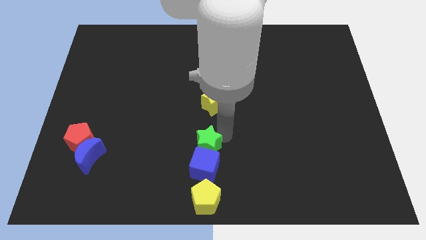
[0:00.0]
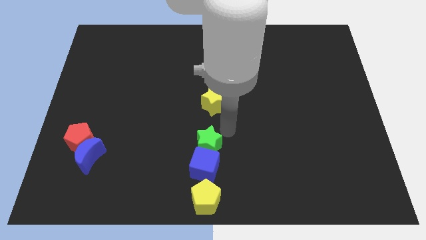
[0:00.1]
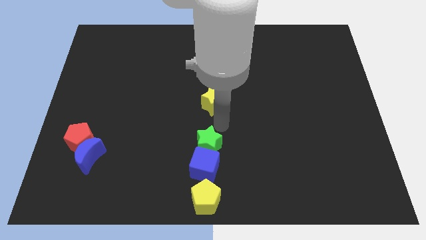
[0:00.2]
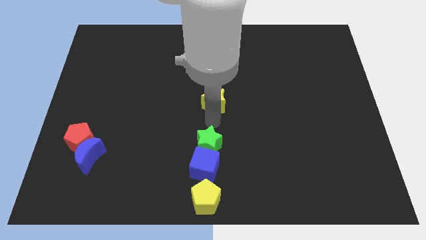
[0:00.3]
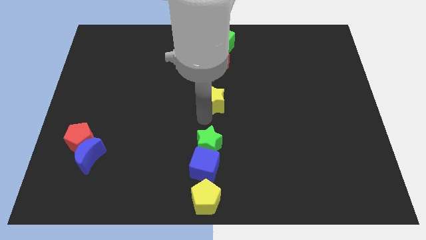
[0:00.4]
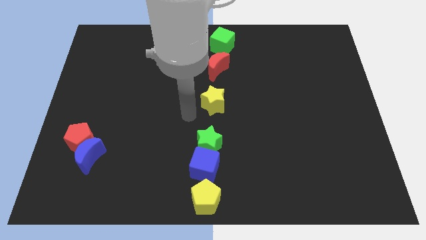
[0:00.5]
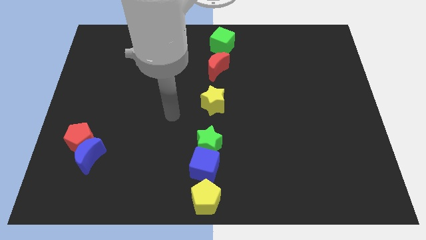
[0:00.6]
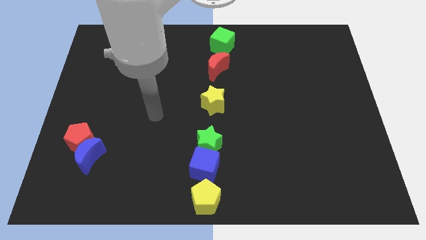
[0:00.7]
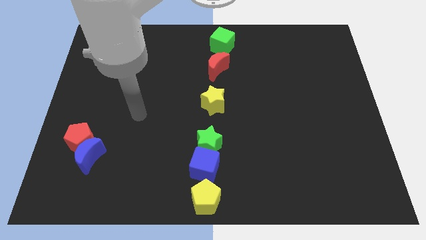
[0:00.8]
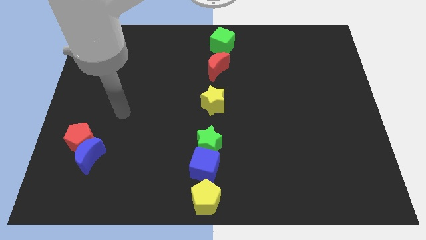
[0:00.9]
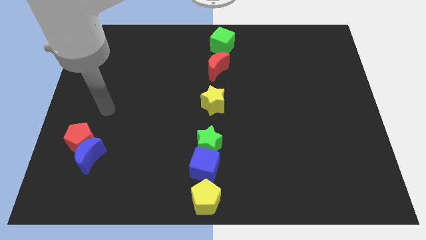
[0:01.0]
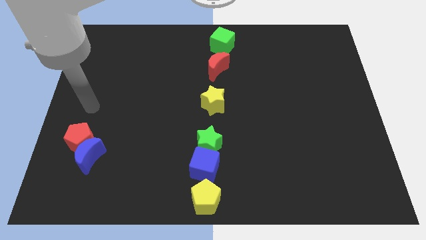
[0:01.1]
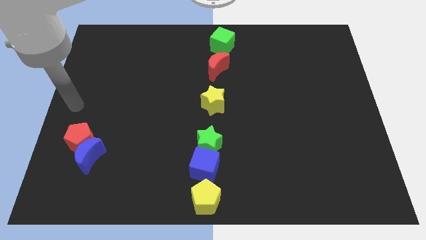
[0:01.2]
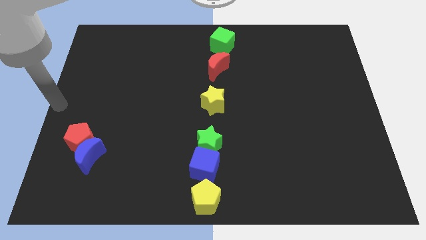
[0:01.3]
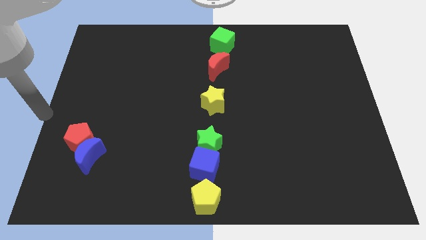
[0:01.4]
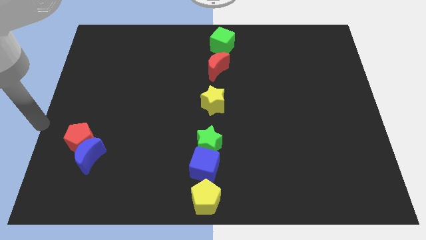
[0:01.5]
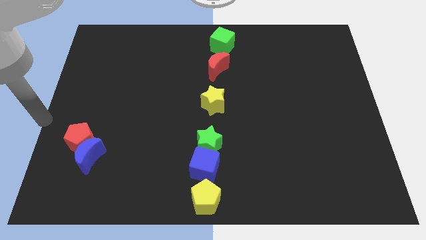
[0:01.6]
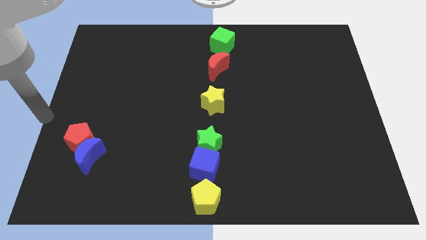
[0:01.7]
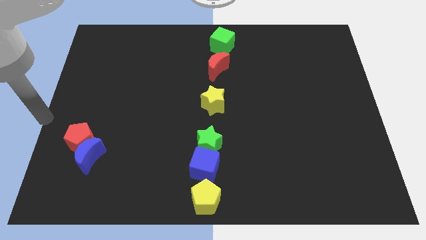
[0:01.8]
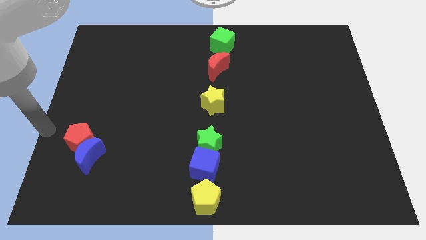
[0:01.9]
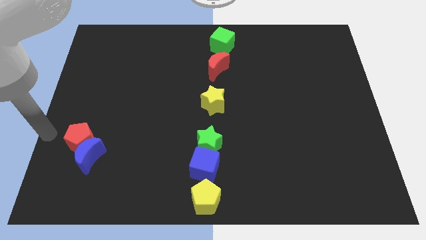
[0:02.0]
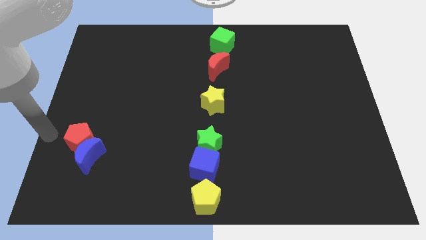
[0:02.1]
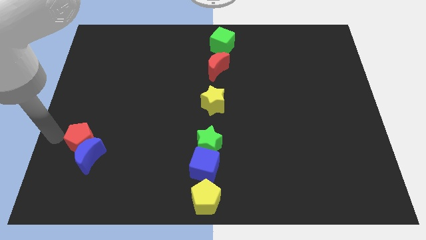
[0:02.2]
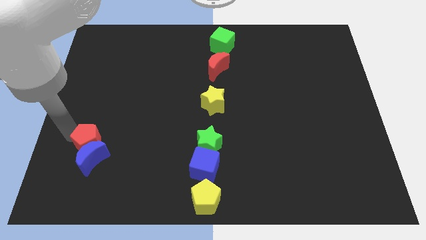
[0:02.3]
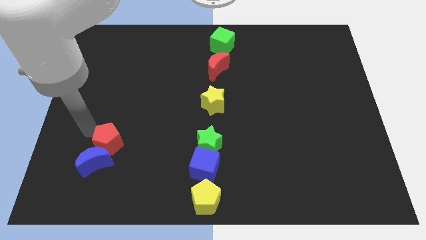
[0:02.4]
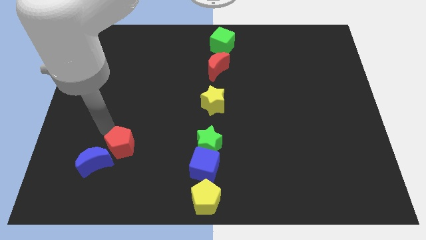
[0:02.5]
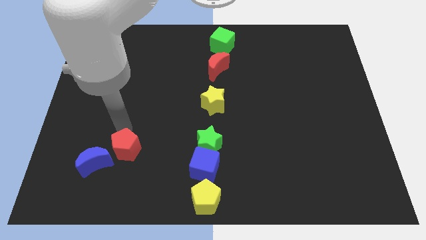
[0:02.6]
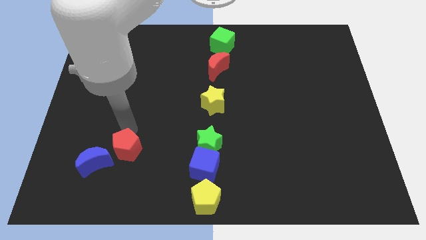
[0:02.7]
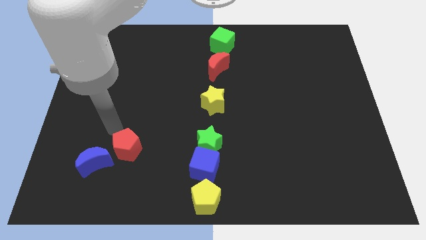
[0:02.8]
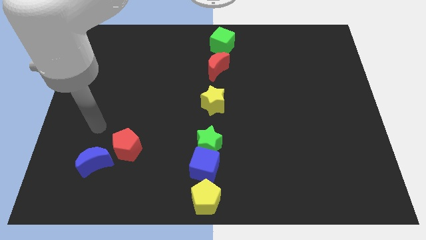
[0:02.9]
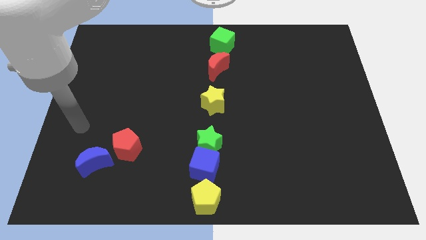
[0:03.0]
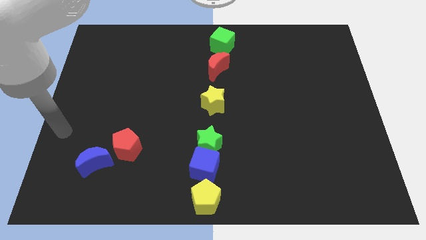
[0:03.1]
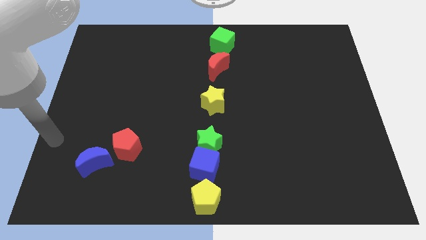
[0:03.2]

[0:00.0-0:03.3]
separate red pentagon from blue moon

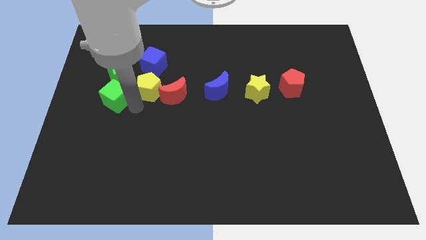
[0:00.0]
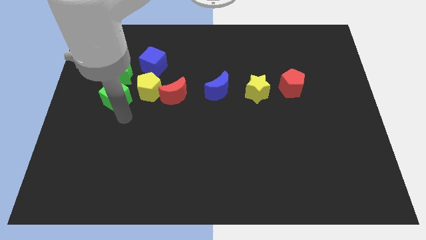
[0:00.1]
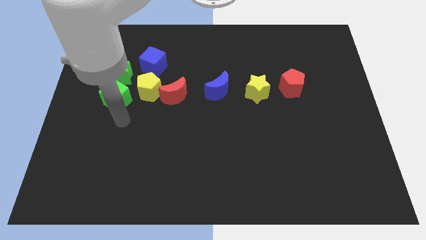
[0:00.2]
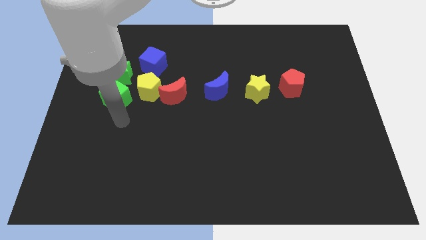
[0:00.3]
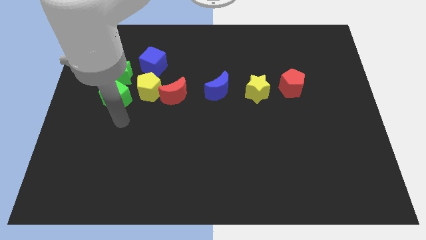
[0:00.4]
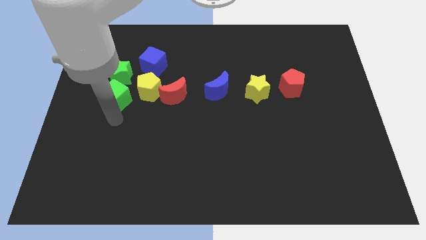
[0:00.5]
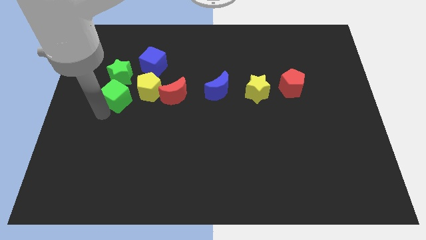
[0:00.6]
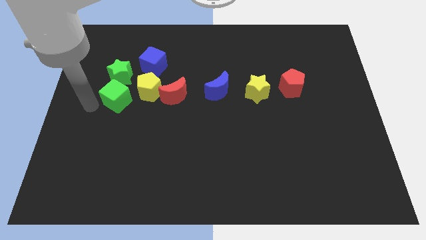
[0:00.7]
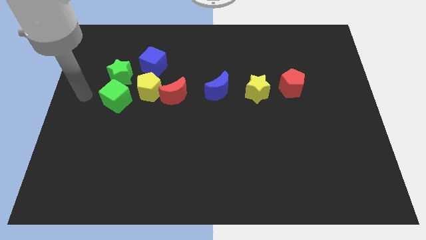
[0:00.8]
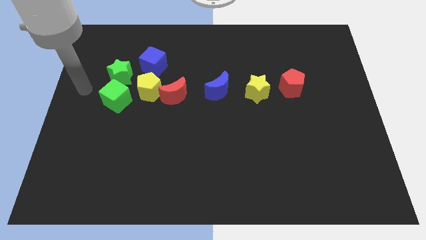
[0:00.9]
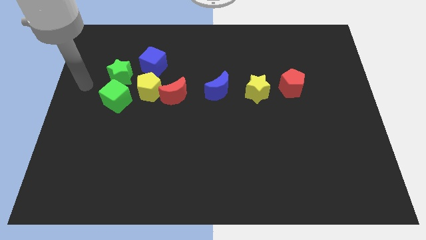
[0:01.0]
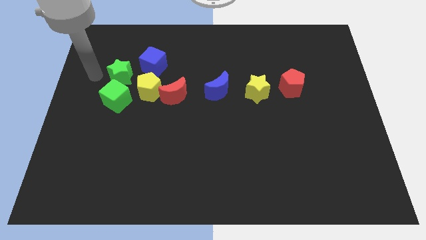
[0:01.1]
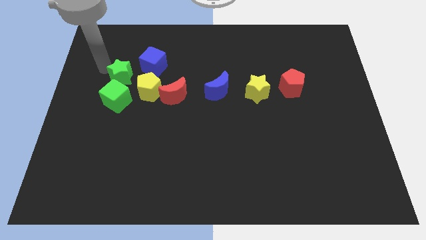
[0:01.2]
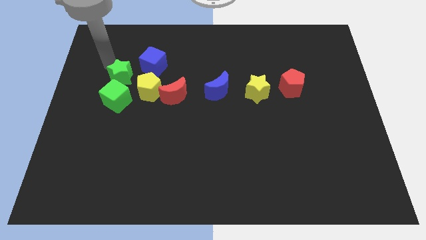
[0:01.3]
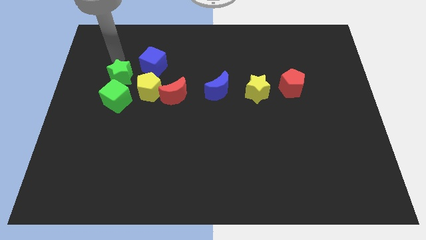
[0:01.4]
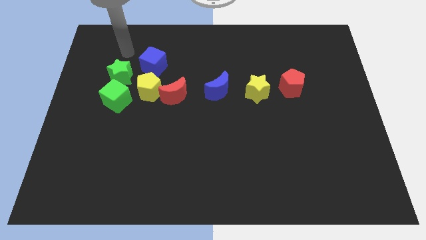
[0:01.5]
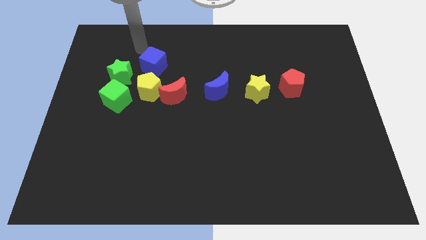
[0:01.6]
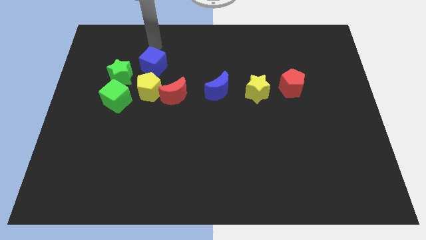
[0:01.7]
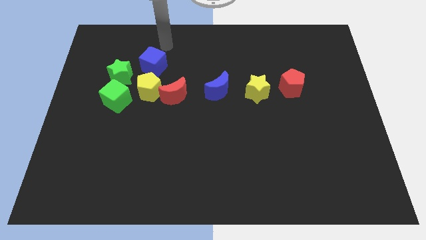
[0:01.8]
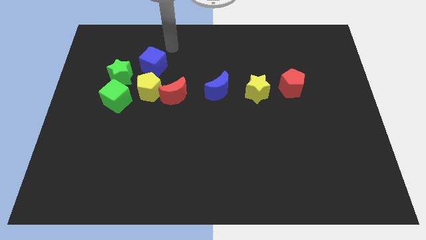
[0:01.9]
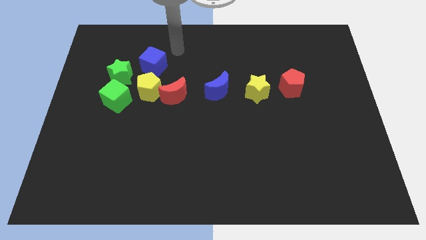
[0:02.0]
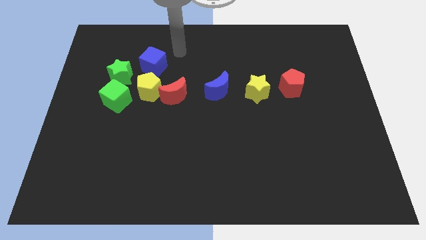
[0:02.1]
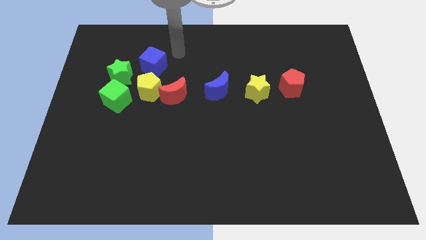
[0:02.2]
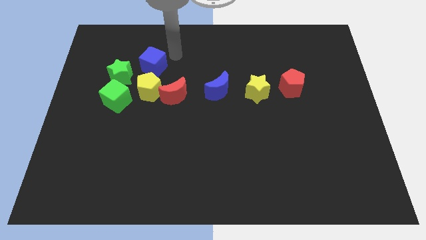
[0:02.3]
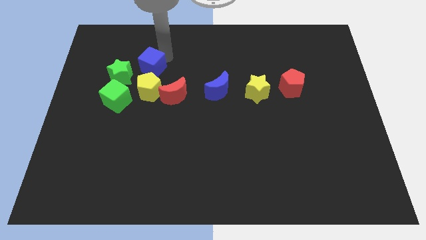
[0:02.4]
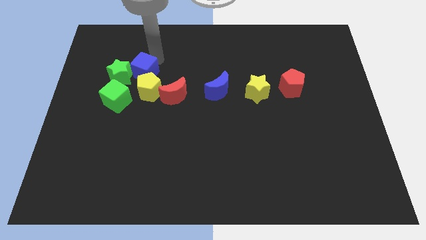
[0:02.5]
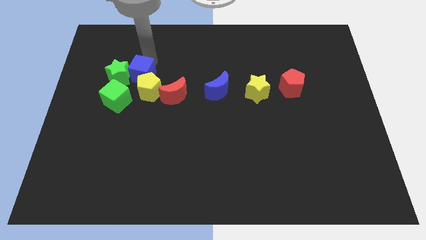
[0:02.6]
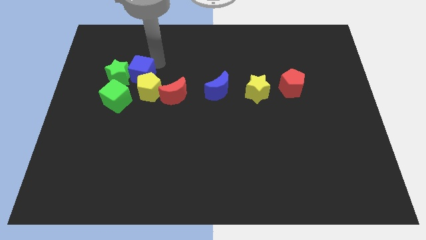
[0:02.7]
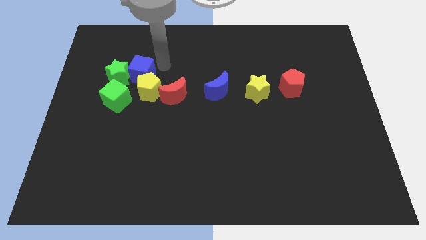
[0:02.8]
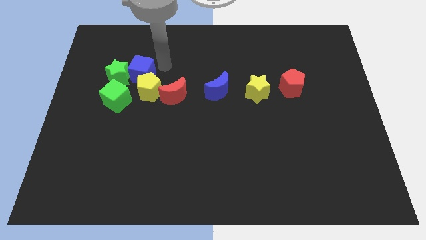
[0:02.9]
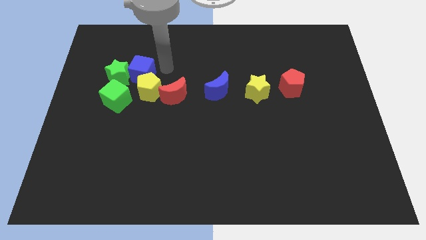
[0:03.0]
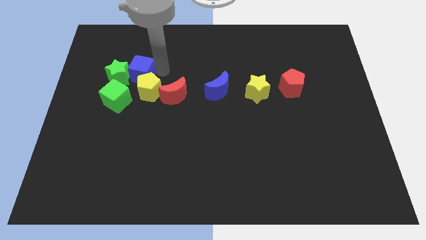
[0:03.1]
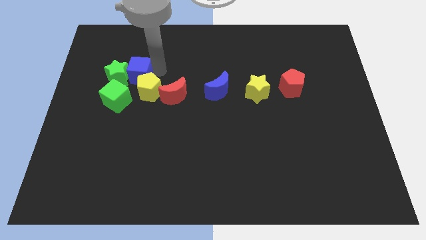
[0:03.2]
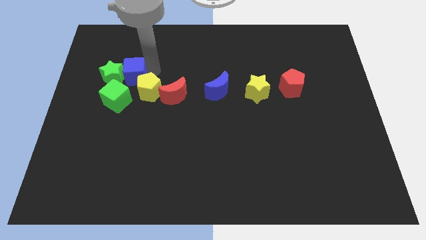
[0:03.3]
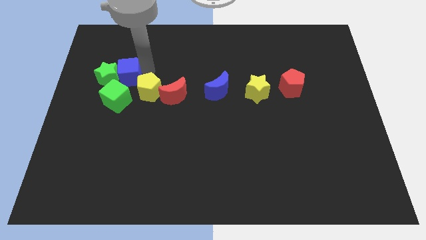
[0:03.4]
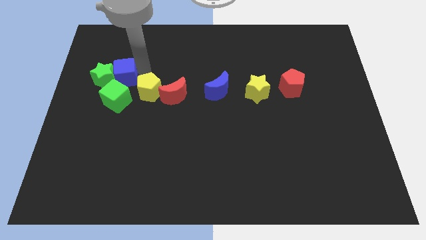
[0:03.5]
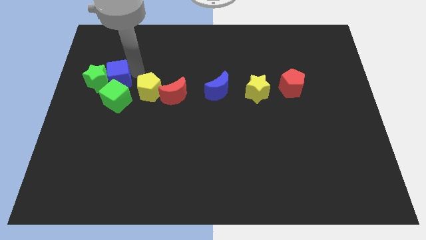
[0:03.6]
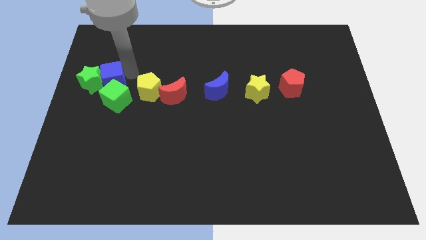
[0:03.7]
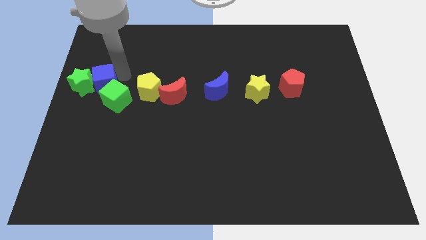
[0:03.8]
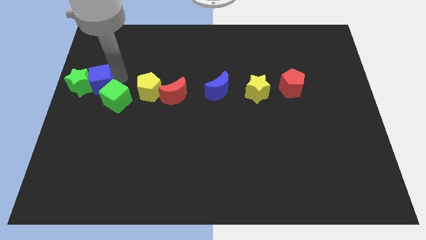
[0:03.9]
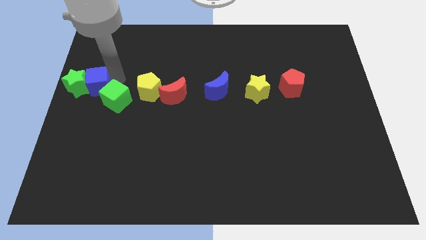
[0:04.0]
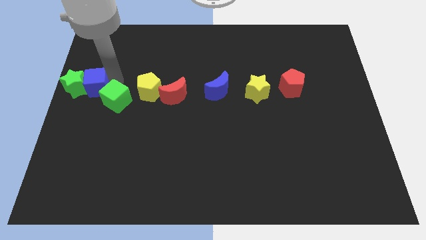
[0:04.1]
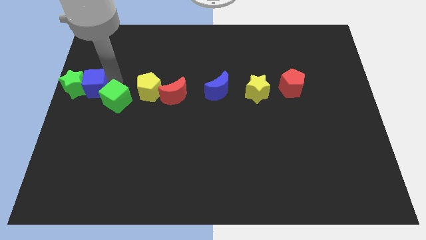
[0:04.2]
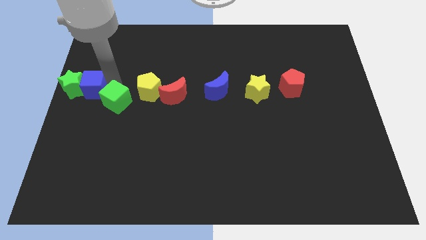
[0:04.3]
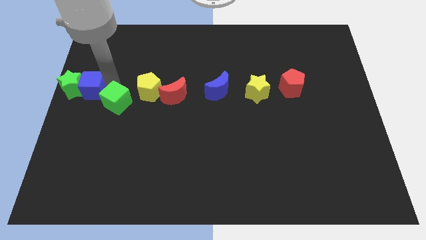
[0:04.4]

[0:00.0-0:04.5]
push the blue cube slightly to the center left of the board

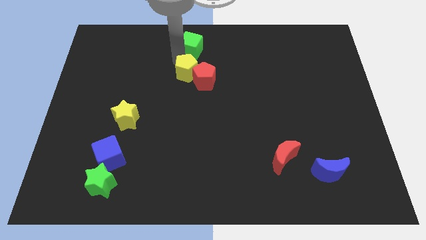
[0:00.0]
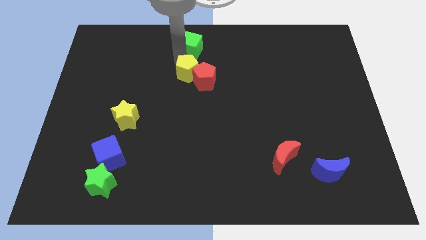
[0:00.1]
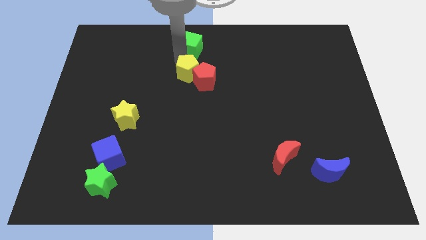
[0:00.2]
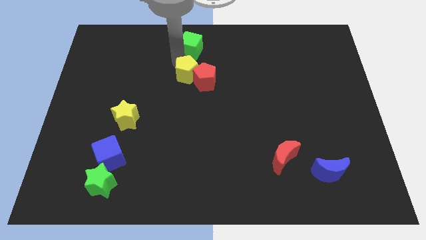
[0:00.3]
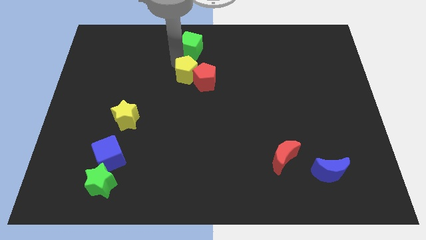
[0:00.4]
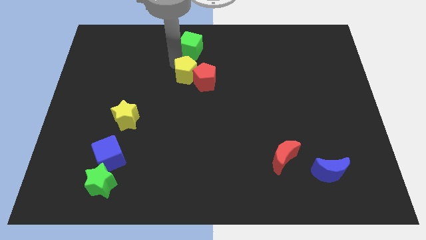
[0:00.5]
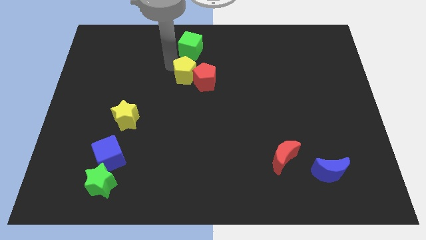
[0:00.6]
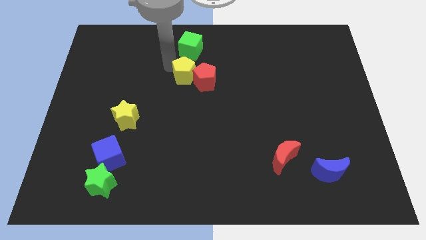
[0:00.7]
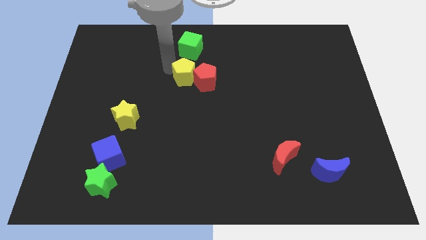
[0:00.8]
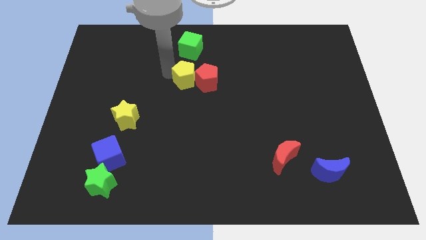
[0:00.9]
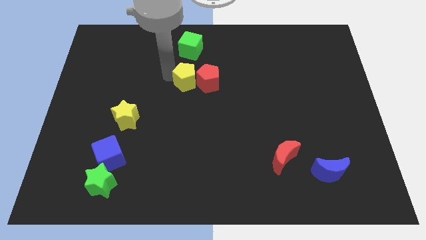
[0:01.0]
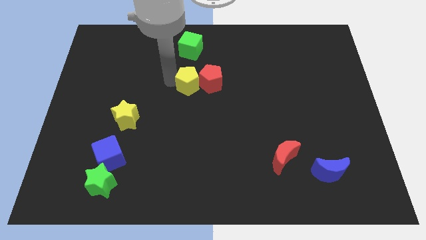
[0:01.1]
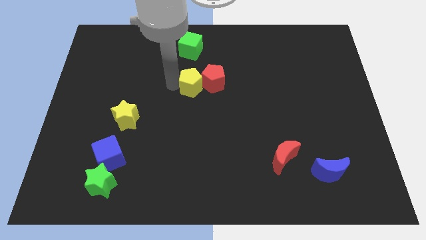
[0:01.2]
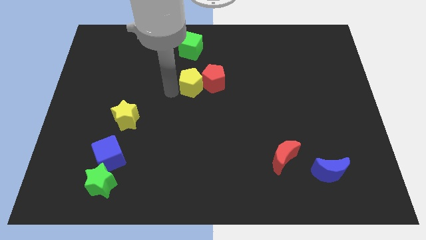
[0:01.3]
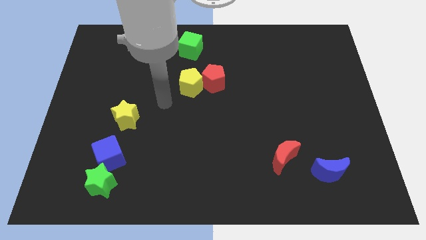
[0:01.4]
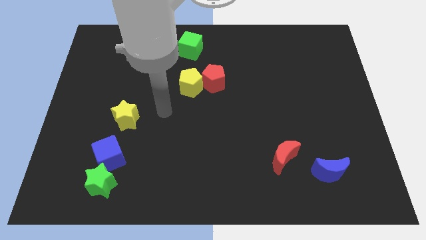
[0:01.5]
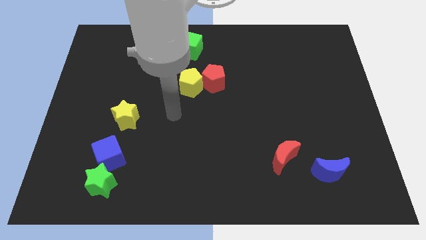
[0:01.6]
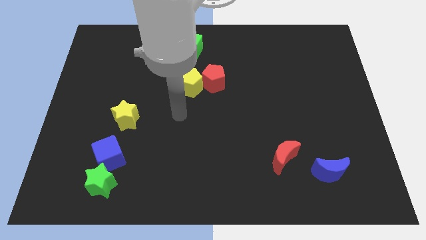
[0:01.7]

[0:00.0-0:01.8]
move yellow pentagon to the left of red pentagon
